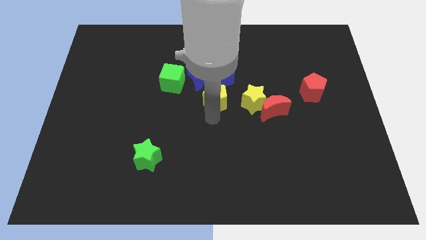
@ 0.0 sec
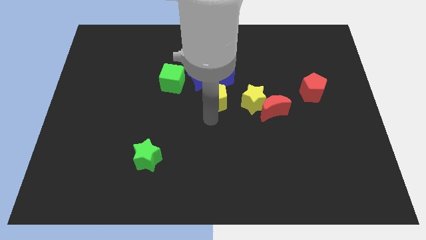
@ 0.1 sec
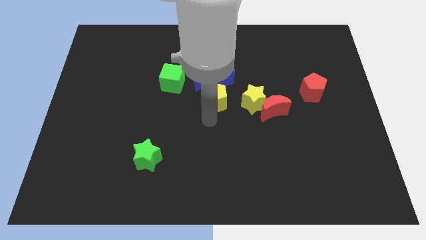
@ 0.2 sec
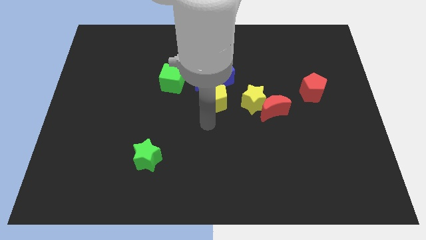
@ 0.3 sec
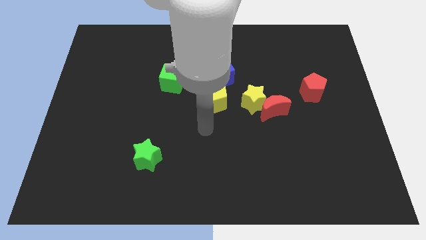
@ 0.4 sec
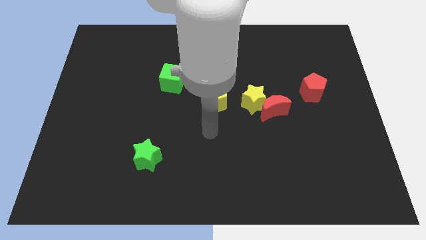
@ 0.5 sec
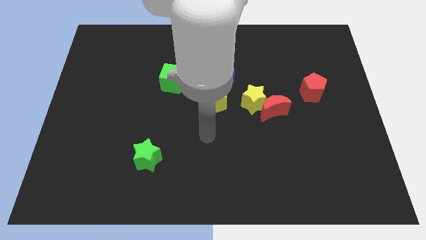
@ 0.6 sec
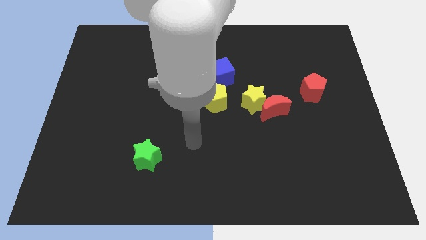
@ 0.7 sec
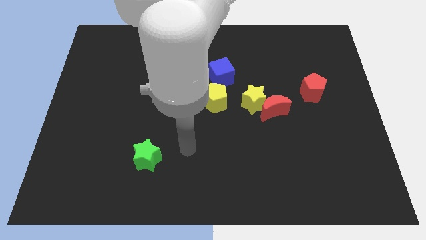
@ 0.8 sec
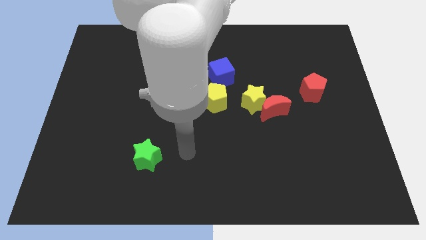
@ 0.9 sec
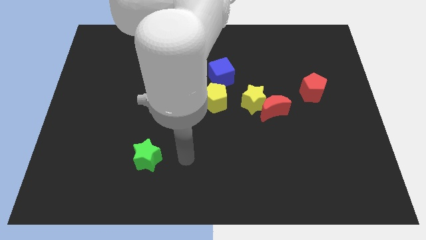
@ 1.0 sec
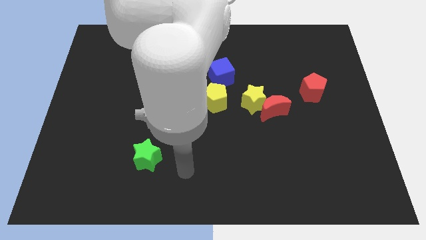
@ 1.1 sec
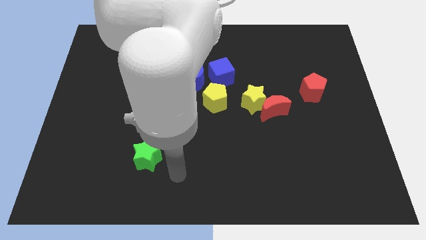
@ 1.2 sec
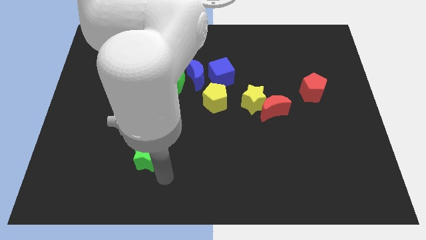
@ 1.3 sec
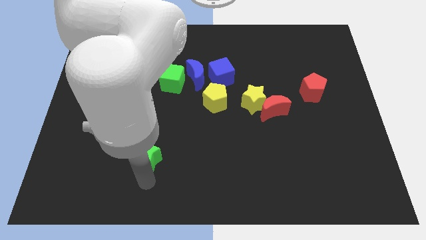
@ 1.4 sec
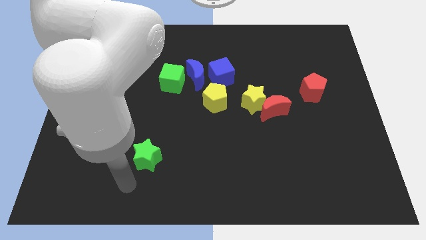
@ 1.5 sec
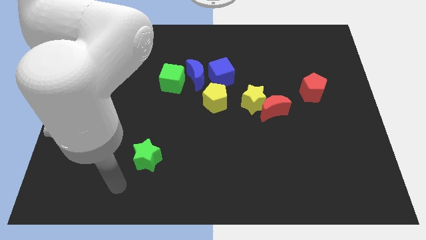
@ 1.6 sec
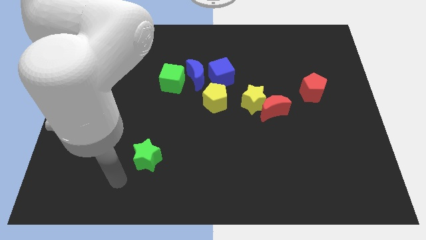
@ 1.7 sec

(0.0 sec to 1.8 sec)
move yourself away from the yellow pentagon

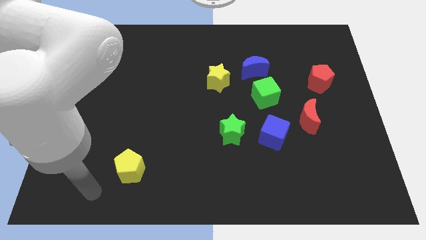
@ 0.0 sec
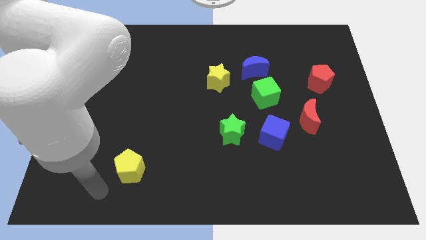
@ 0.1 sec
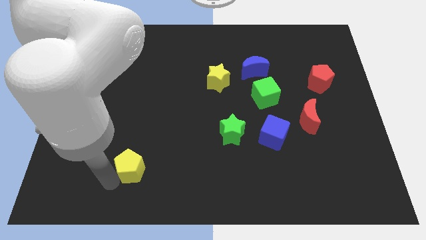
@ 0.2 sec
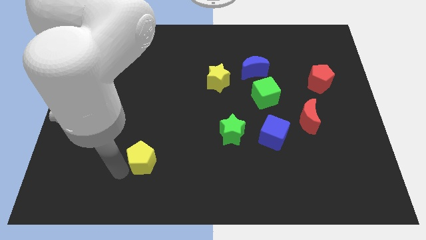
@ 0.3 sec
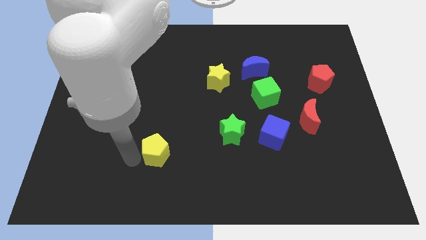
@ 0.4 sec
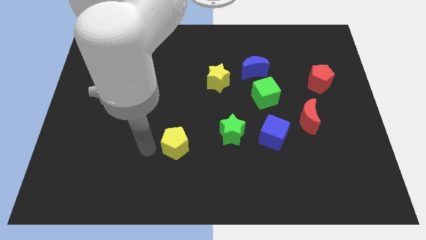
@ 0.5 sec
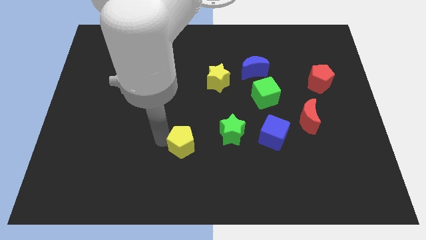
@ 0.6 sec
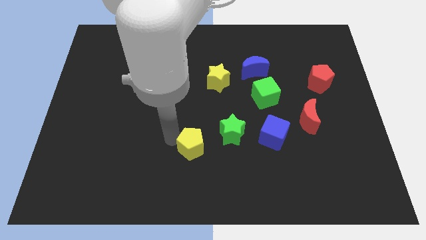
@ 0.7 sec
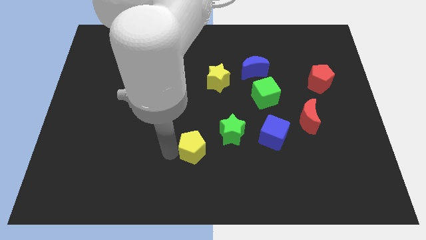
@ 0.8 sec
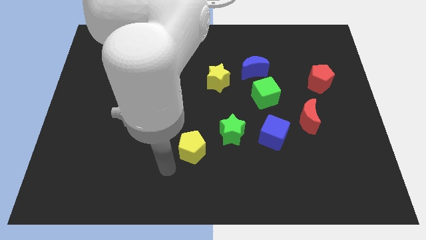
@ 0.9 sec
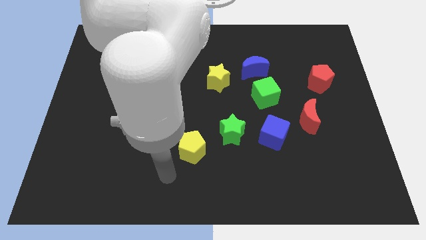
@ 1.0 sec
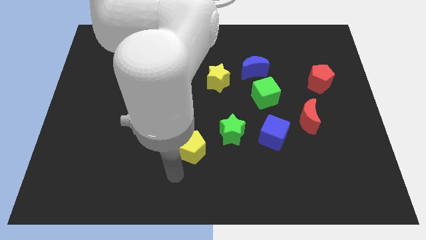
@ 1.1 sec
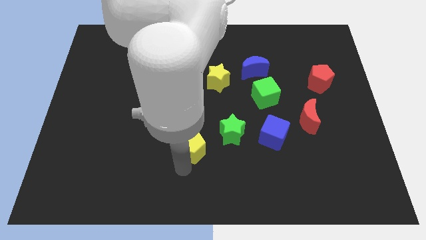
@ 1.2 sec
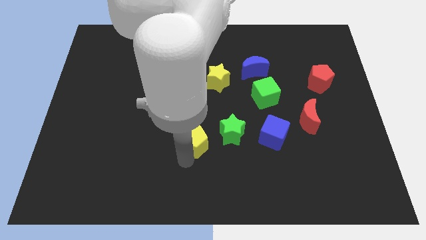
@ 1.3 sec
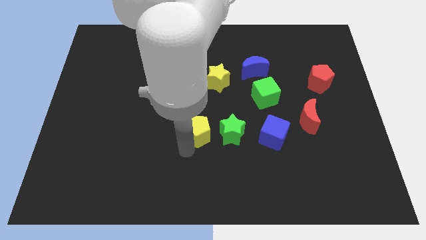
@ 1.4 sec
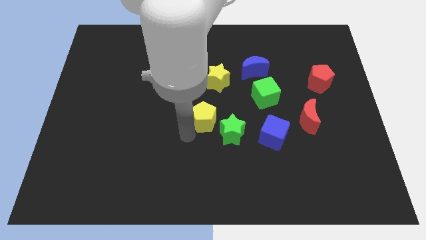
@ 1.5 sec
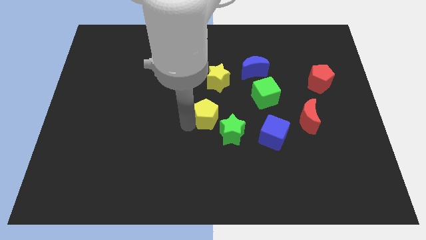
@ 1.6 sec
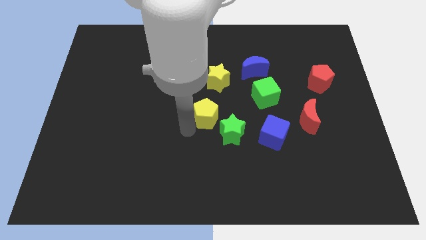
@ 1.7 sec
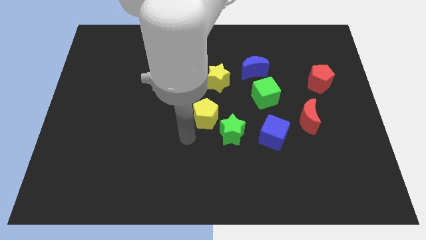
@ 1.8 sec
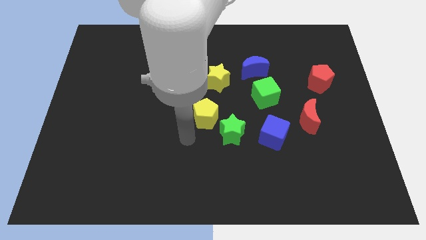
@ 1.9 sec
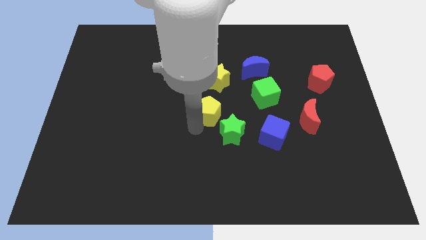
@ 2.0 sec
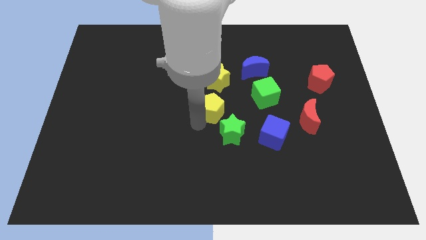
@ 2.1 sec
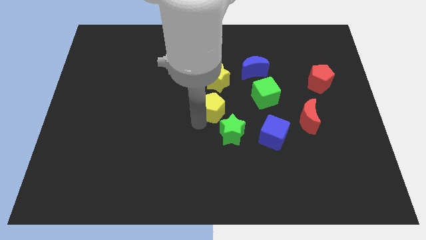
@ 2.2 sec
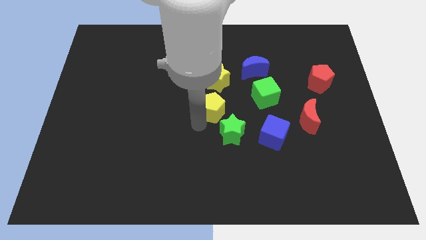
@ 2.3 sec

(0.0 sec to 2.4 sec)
place yellow pentagon below yellow star

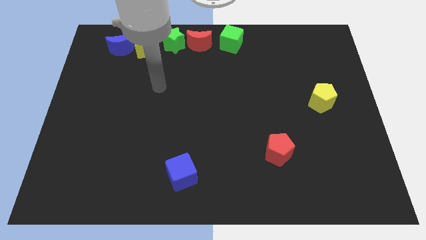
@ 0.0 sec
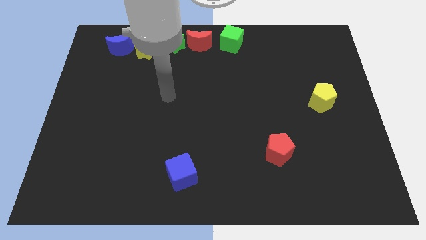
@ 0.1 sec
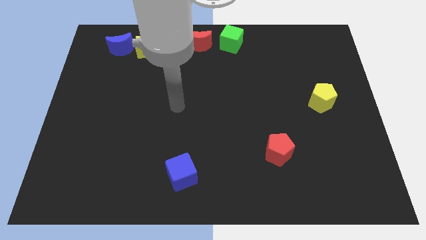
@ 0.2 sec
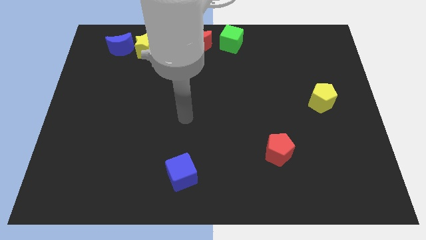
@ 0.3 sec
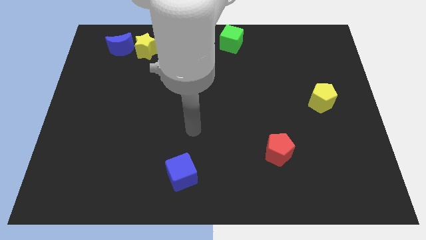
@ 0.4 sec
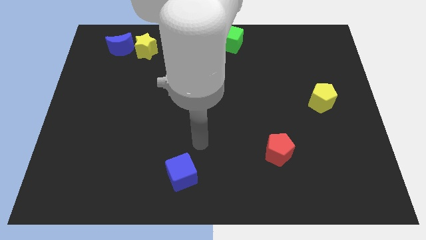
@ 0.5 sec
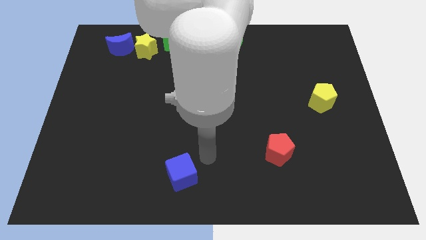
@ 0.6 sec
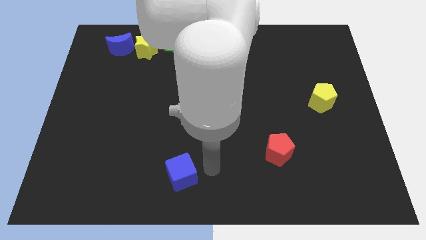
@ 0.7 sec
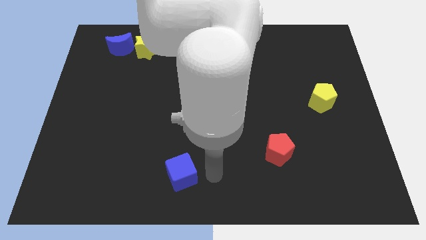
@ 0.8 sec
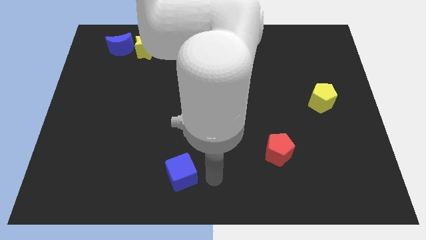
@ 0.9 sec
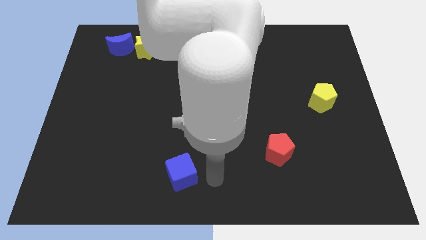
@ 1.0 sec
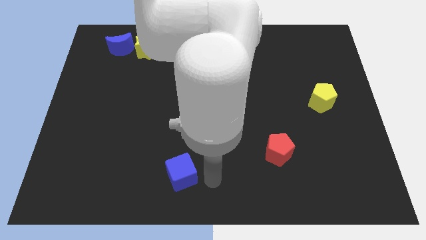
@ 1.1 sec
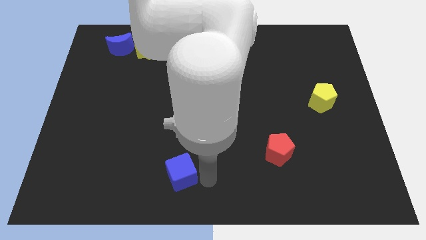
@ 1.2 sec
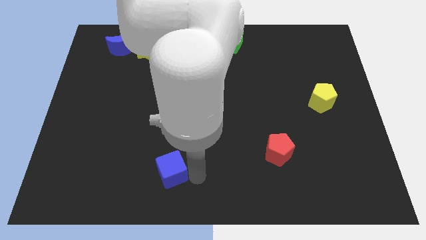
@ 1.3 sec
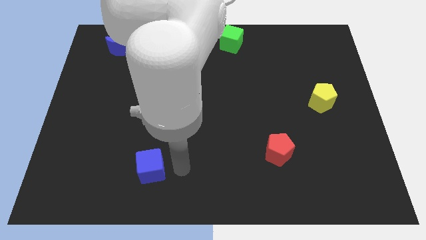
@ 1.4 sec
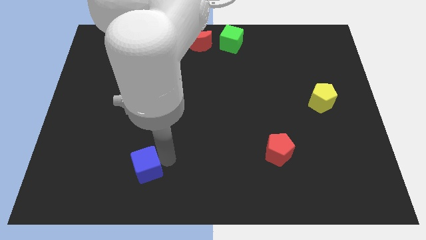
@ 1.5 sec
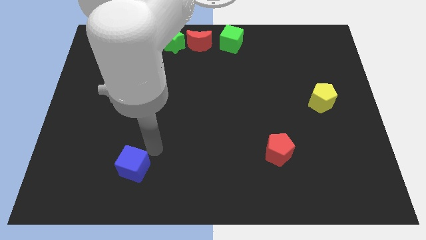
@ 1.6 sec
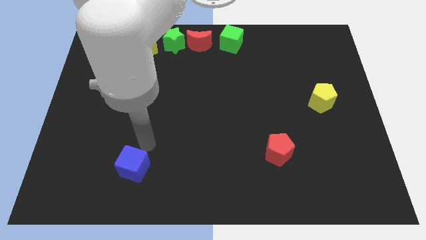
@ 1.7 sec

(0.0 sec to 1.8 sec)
move the blue cube slightly to the left of the board

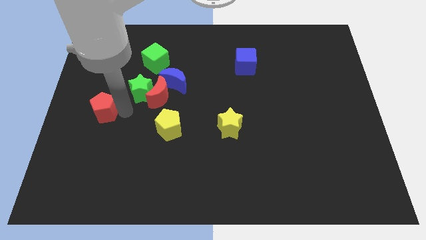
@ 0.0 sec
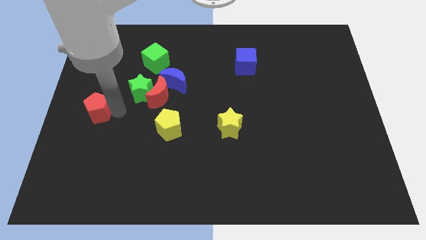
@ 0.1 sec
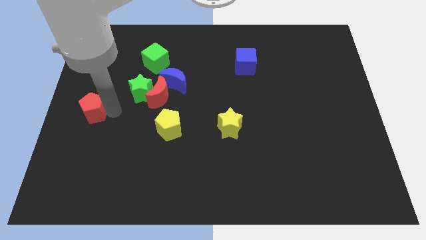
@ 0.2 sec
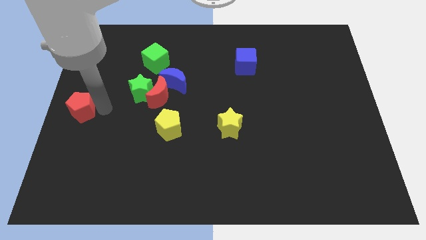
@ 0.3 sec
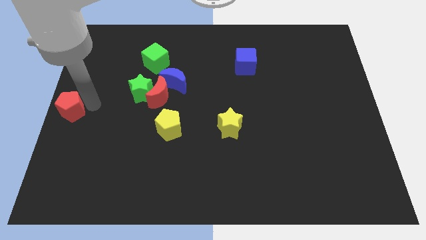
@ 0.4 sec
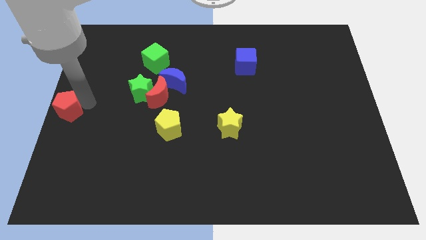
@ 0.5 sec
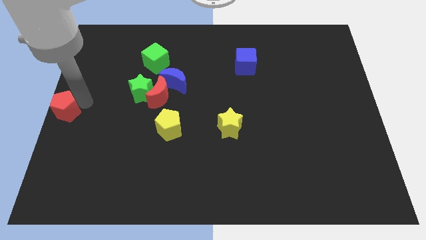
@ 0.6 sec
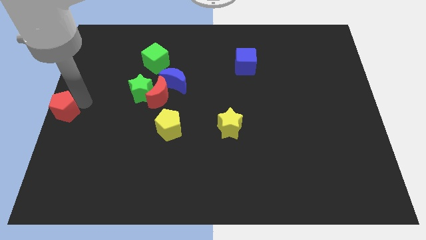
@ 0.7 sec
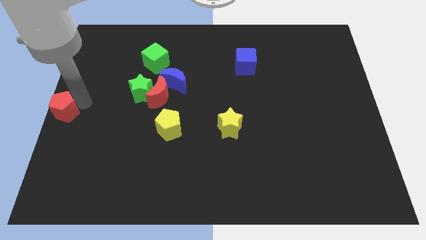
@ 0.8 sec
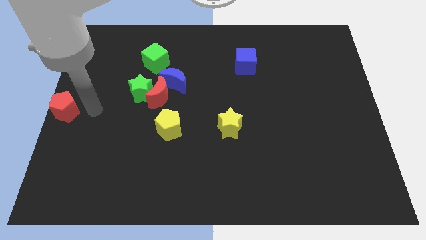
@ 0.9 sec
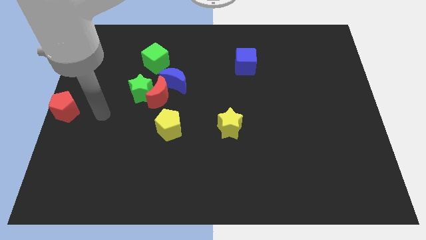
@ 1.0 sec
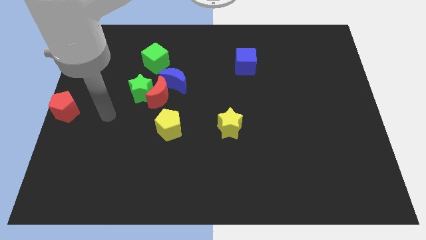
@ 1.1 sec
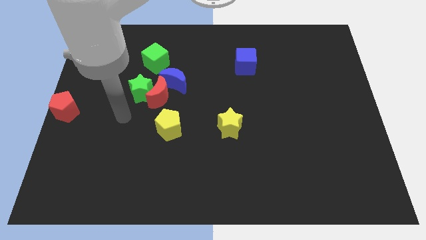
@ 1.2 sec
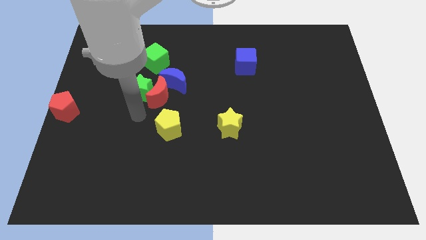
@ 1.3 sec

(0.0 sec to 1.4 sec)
push the red pentagon to the left center of the board

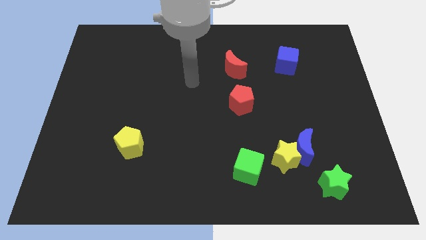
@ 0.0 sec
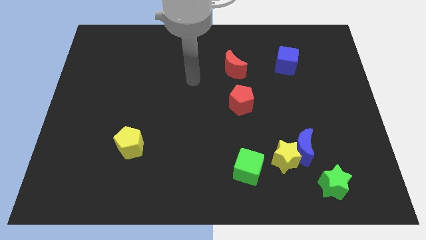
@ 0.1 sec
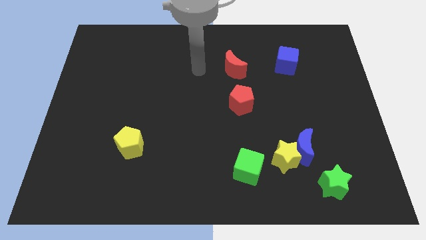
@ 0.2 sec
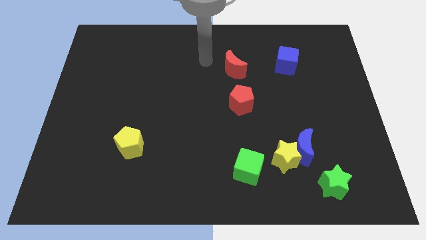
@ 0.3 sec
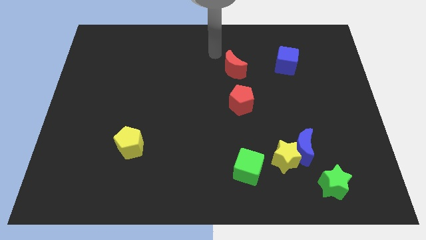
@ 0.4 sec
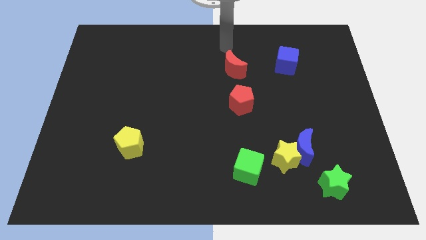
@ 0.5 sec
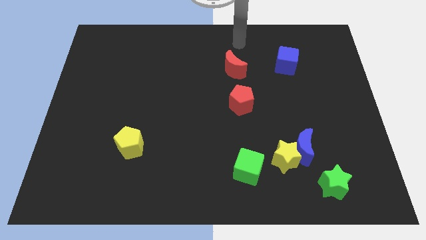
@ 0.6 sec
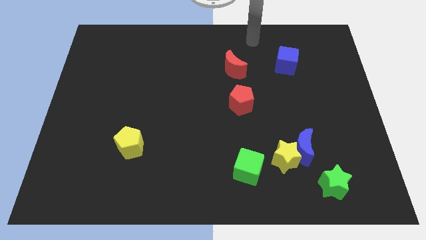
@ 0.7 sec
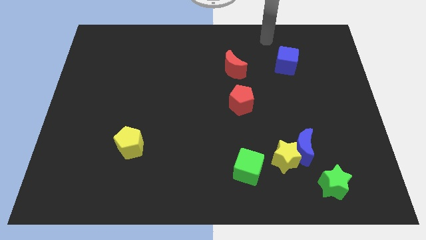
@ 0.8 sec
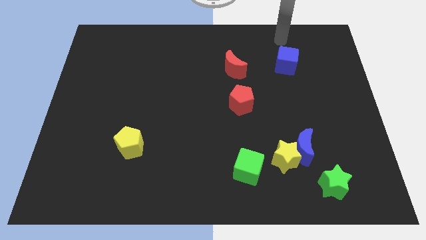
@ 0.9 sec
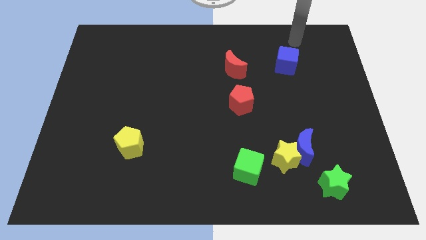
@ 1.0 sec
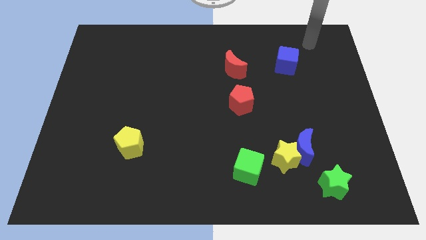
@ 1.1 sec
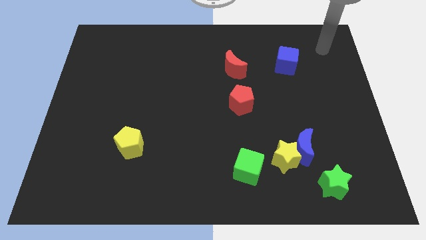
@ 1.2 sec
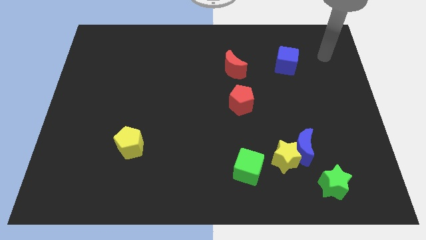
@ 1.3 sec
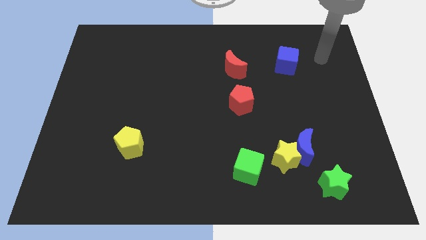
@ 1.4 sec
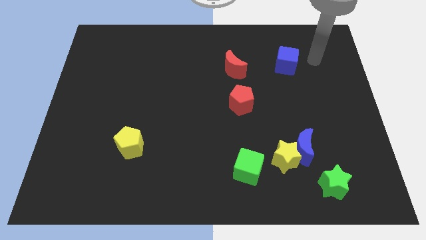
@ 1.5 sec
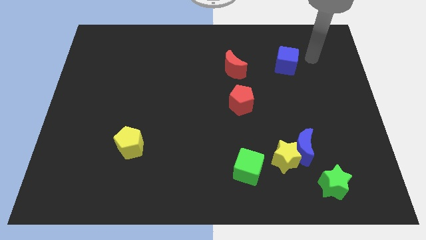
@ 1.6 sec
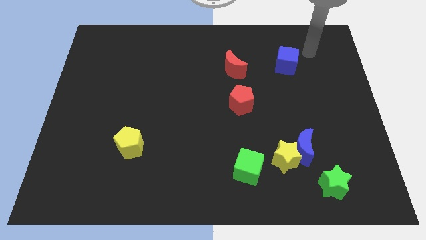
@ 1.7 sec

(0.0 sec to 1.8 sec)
move the arm towards the right to the blue cube
